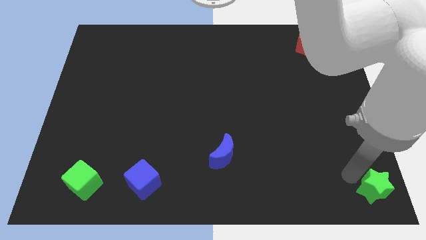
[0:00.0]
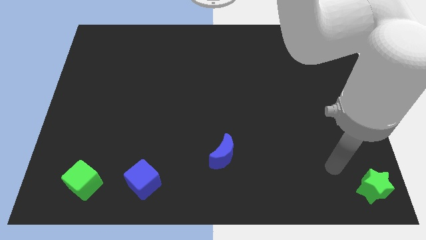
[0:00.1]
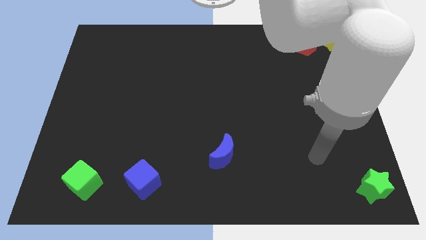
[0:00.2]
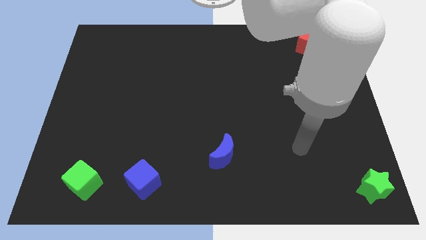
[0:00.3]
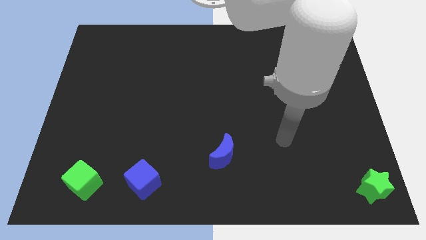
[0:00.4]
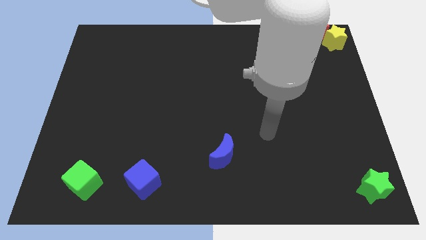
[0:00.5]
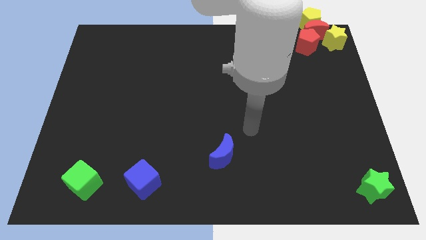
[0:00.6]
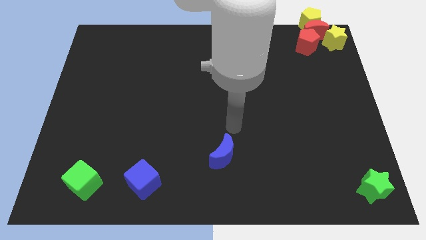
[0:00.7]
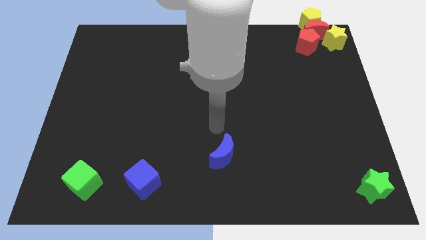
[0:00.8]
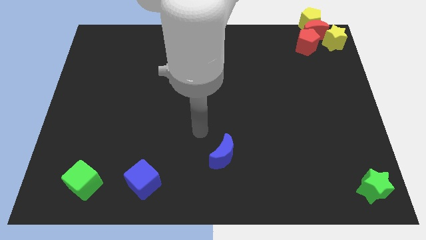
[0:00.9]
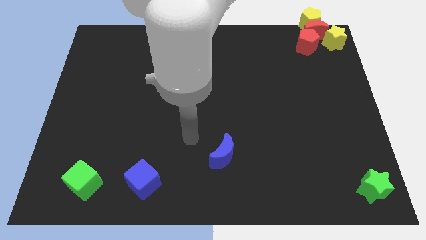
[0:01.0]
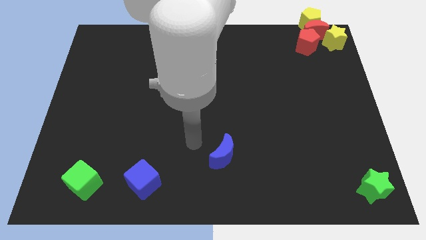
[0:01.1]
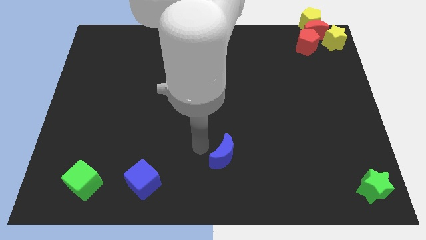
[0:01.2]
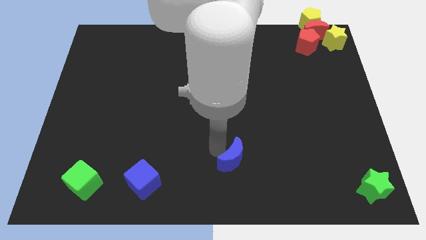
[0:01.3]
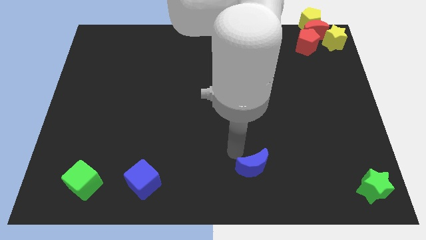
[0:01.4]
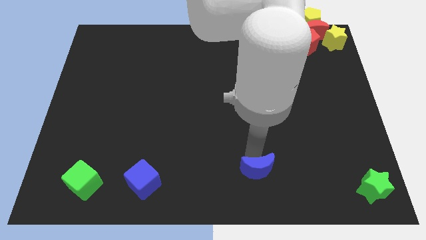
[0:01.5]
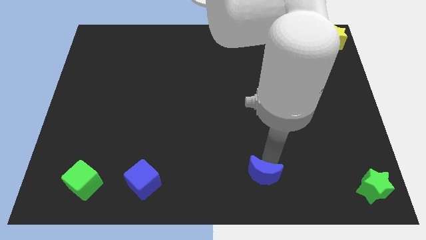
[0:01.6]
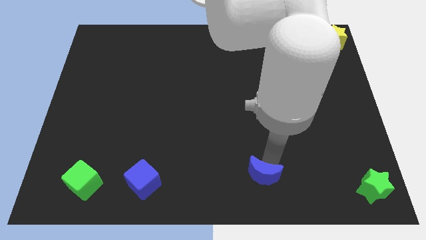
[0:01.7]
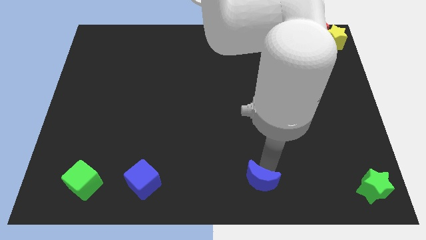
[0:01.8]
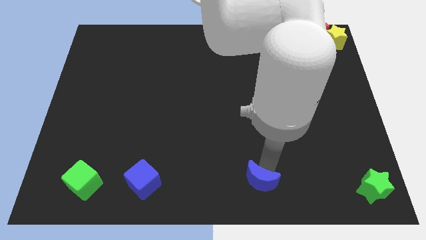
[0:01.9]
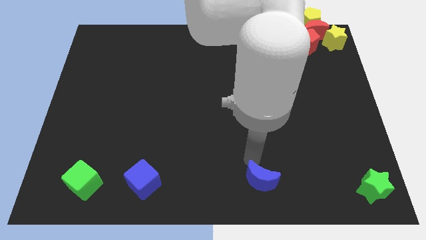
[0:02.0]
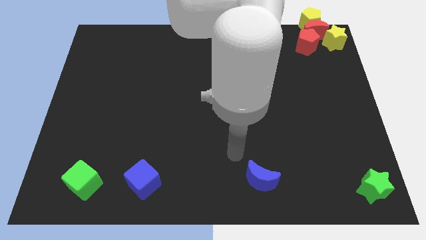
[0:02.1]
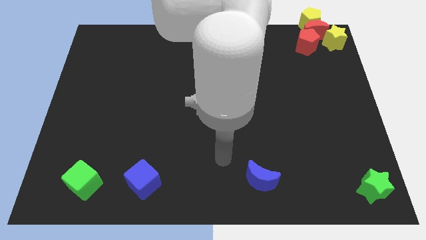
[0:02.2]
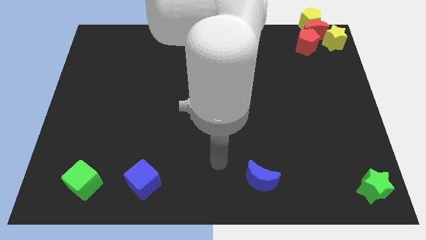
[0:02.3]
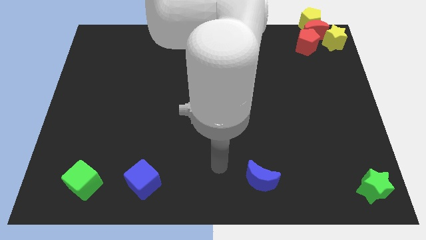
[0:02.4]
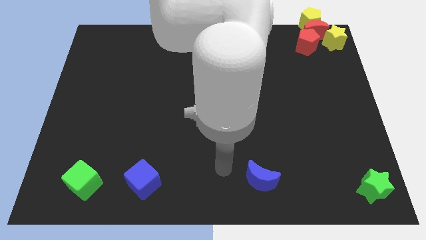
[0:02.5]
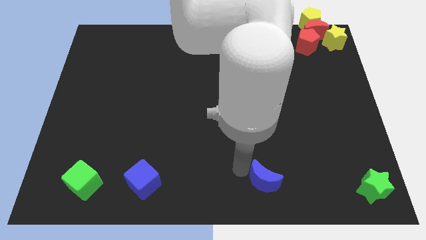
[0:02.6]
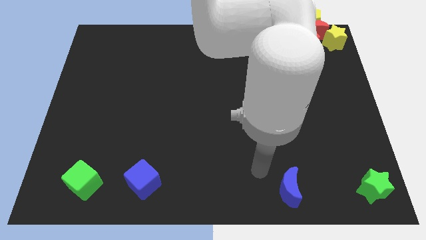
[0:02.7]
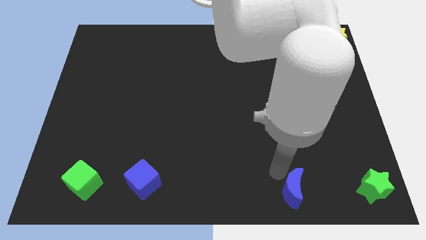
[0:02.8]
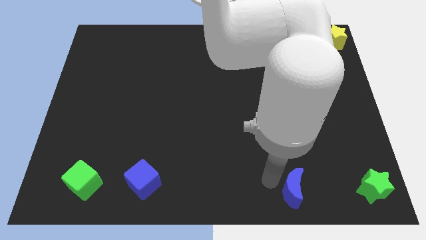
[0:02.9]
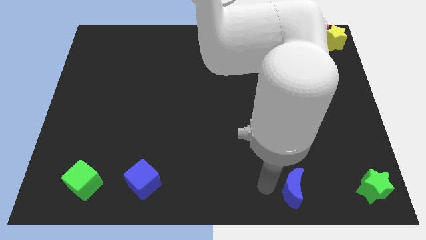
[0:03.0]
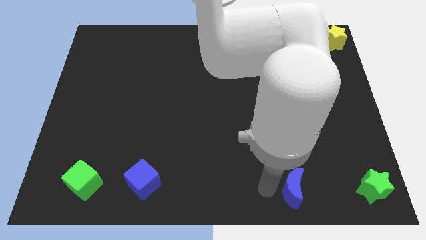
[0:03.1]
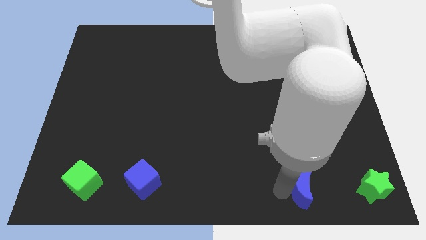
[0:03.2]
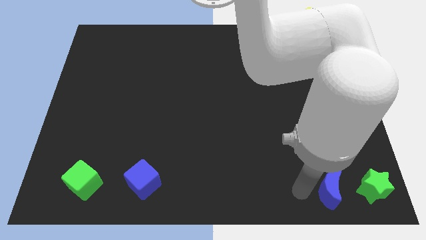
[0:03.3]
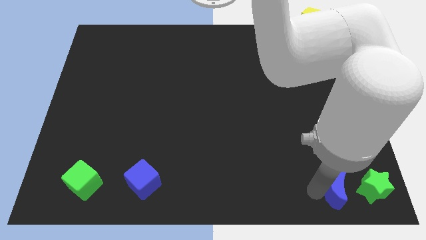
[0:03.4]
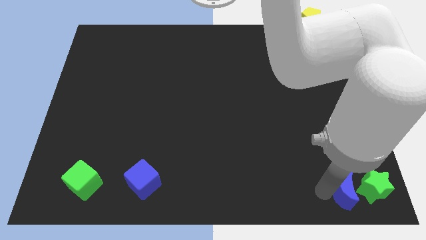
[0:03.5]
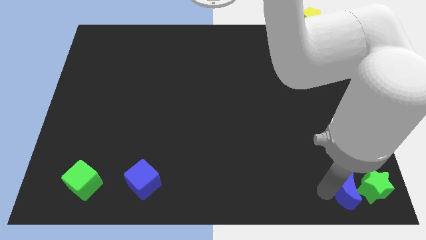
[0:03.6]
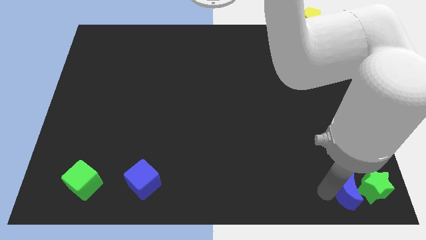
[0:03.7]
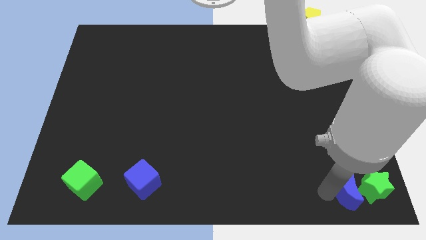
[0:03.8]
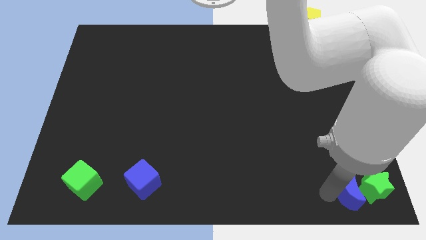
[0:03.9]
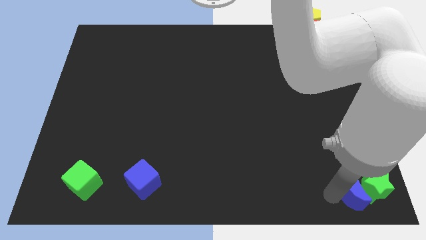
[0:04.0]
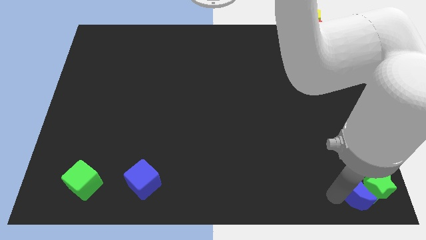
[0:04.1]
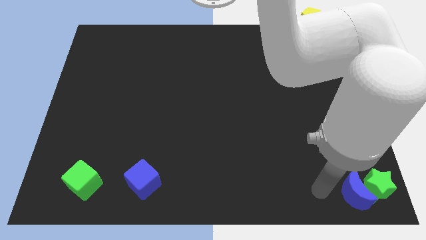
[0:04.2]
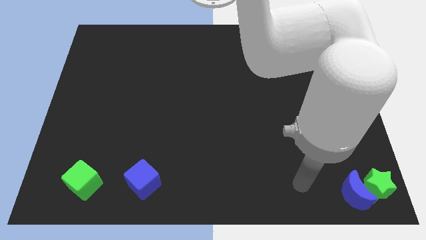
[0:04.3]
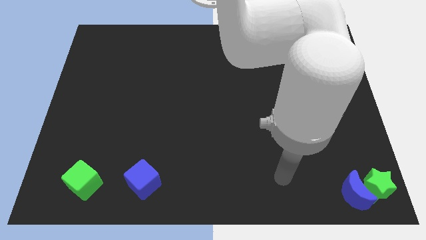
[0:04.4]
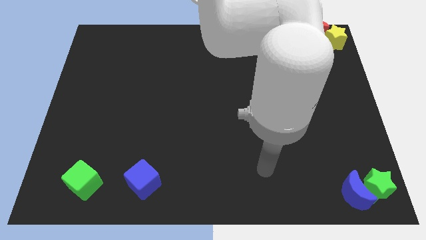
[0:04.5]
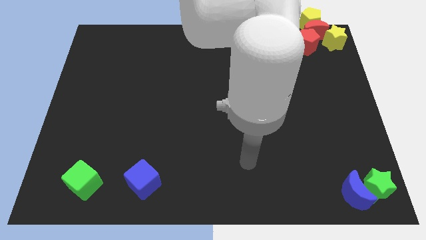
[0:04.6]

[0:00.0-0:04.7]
place the blue crescent beside the green star

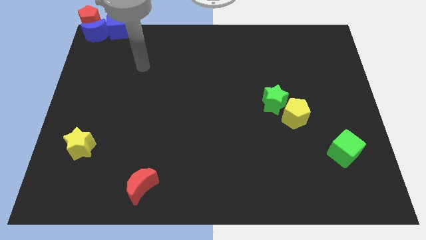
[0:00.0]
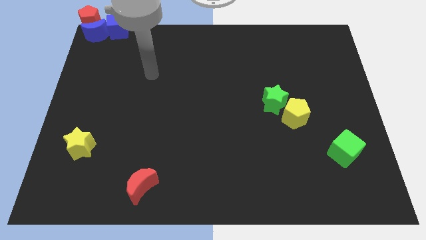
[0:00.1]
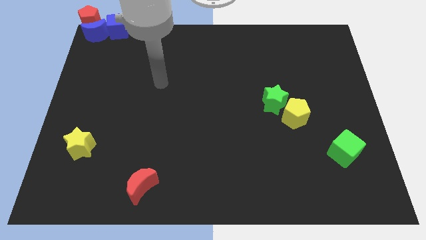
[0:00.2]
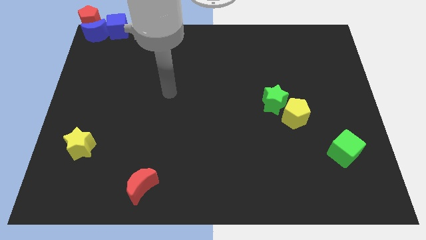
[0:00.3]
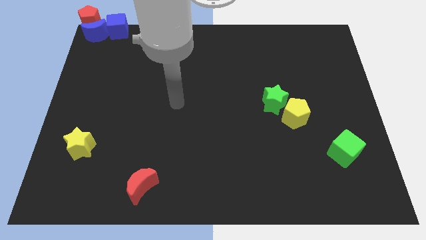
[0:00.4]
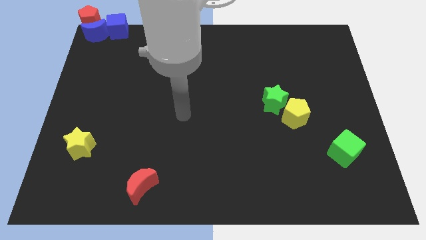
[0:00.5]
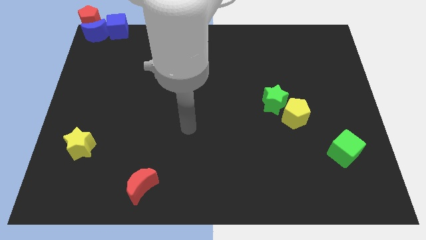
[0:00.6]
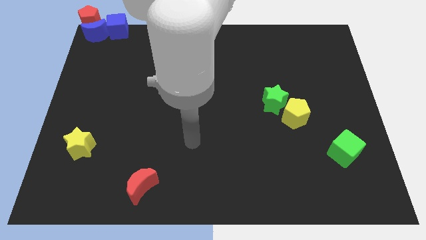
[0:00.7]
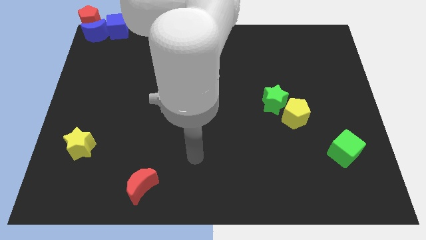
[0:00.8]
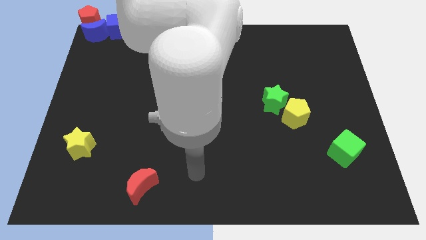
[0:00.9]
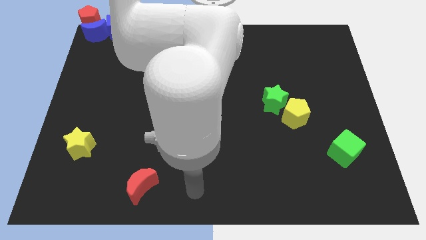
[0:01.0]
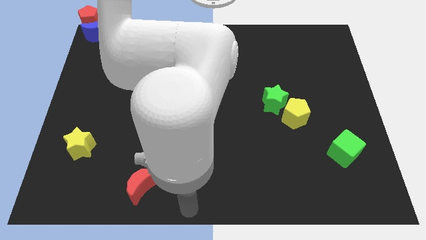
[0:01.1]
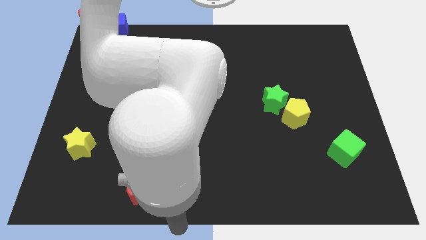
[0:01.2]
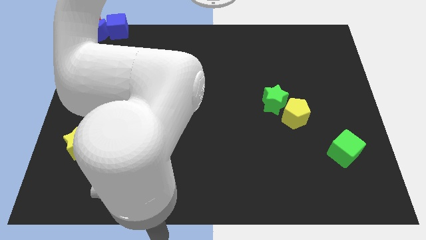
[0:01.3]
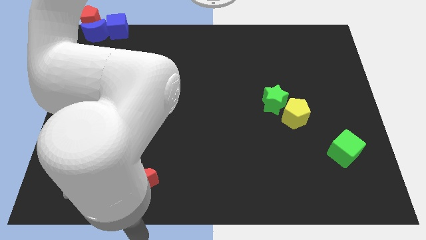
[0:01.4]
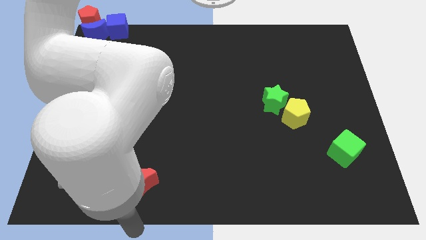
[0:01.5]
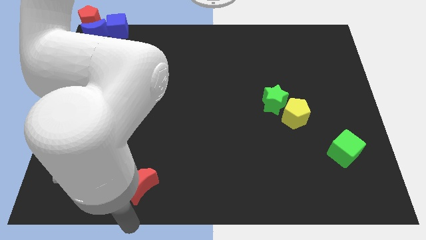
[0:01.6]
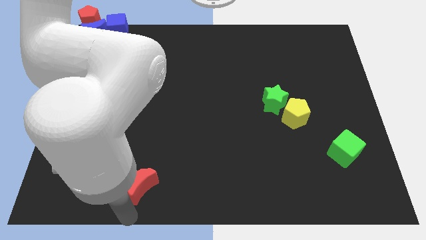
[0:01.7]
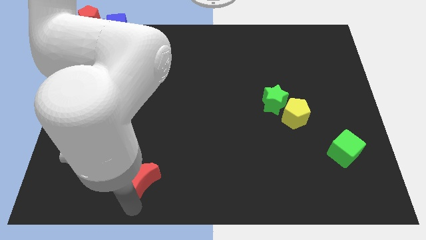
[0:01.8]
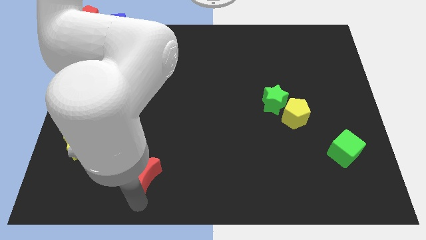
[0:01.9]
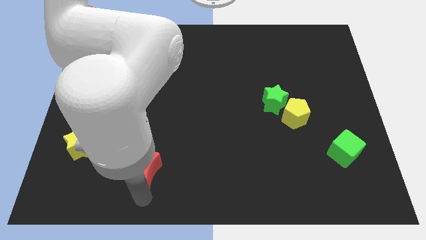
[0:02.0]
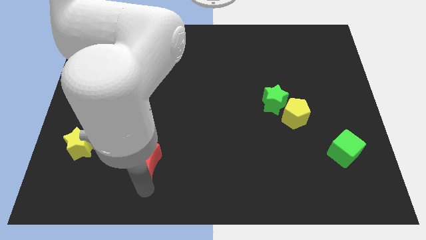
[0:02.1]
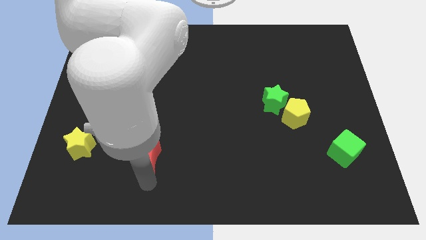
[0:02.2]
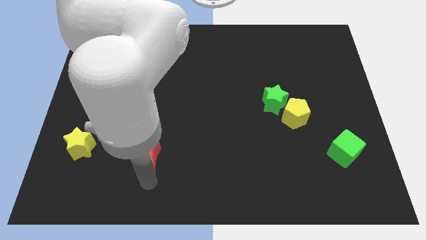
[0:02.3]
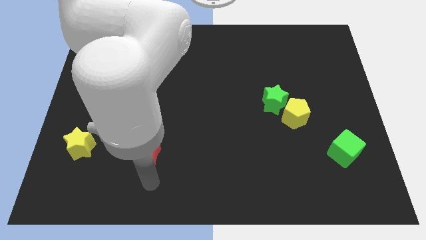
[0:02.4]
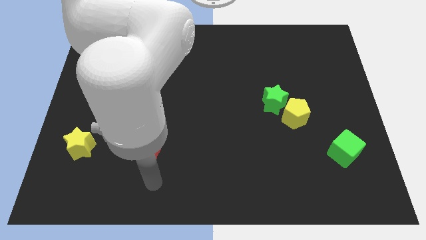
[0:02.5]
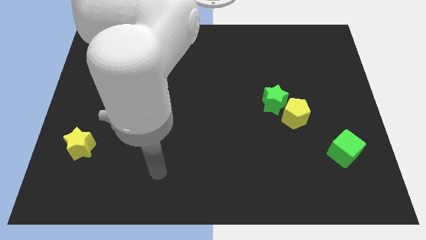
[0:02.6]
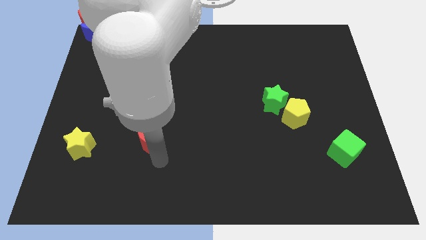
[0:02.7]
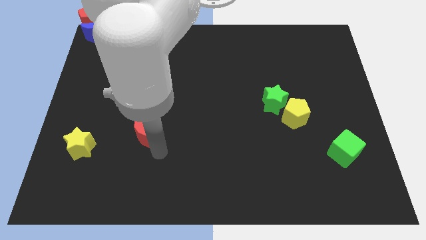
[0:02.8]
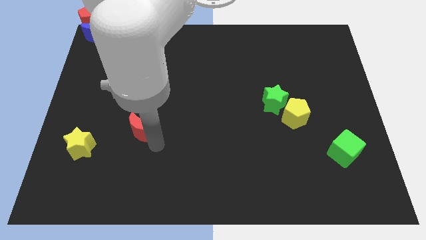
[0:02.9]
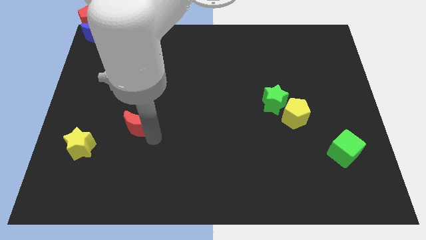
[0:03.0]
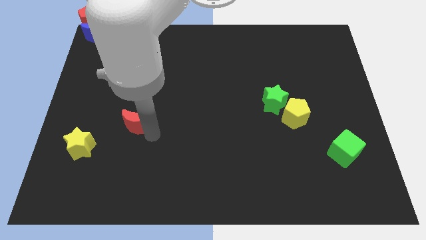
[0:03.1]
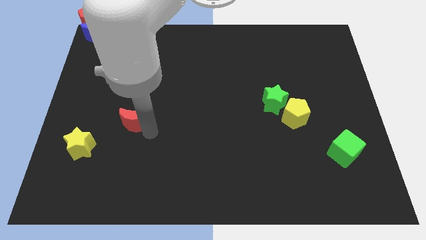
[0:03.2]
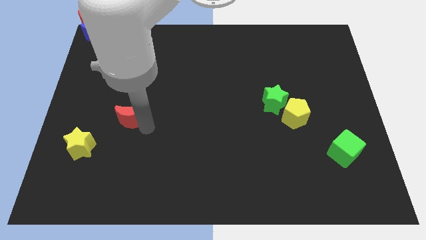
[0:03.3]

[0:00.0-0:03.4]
move red moon to the center

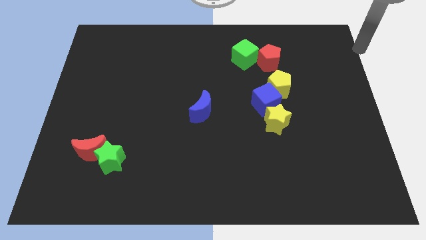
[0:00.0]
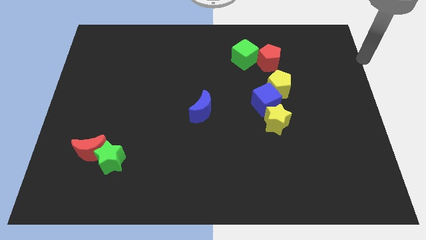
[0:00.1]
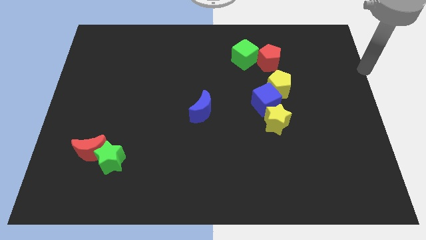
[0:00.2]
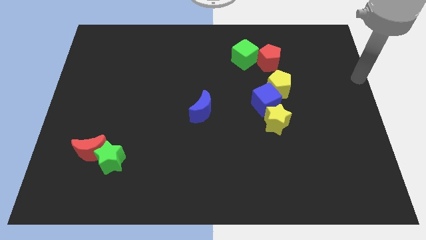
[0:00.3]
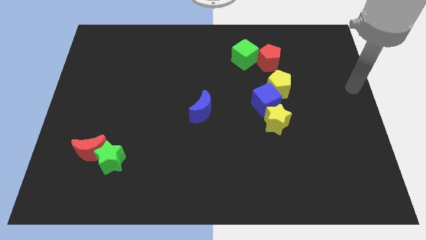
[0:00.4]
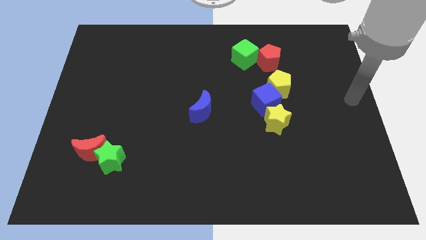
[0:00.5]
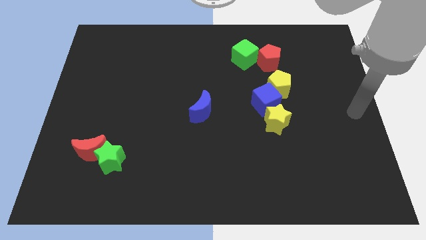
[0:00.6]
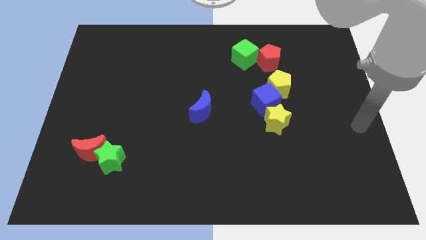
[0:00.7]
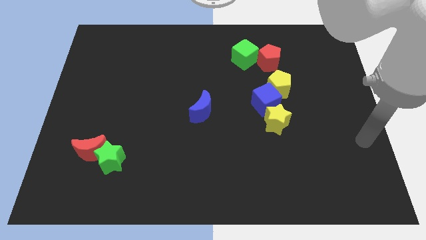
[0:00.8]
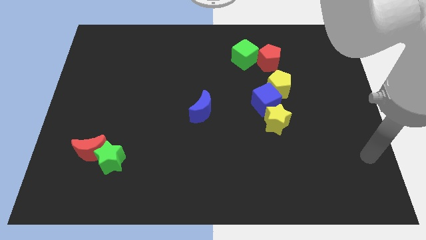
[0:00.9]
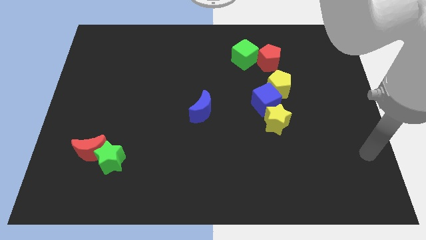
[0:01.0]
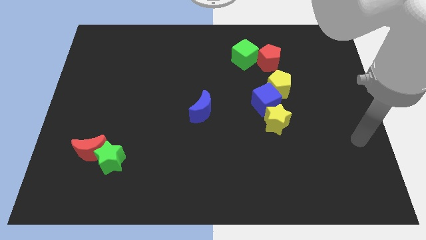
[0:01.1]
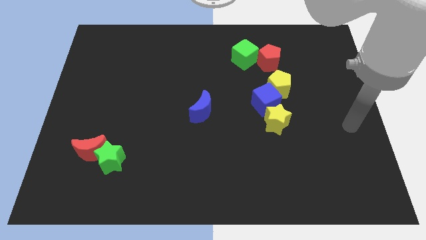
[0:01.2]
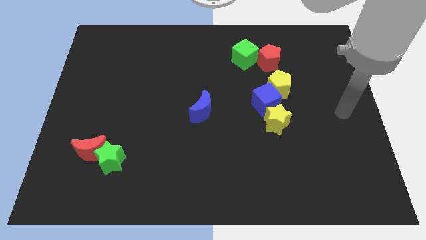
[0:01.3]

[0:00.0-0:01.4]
move your arm to the center right
